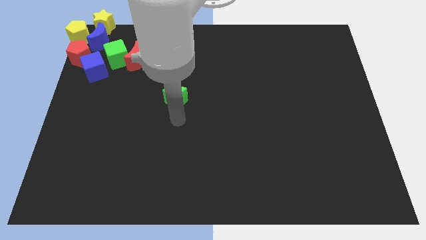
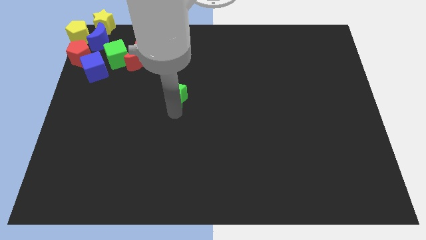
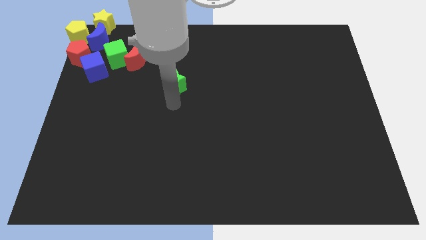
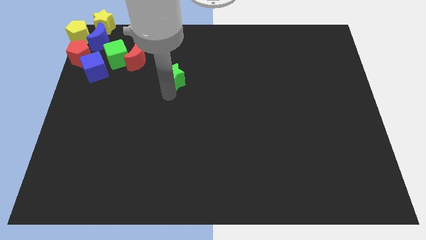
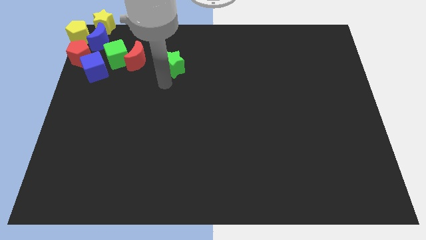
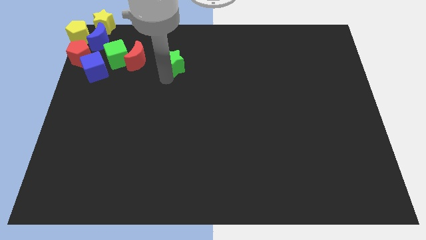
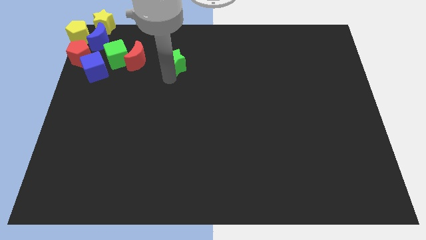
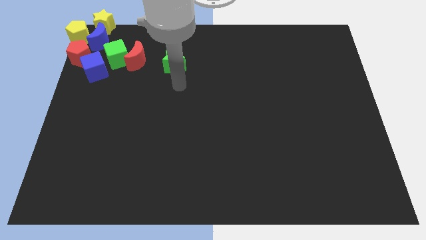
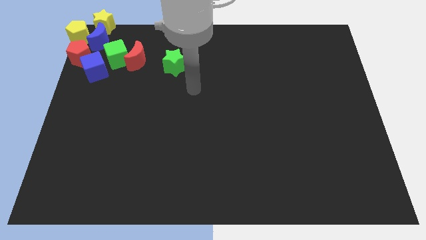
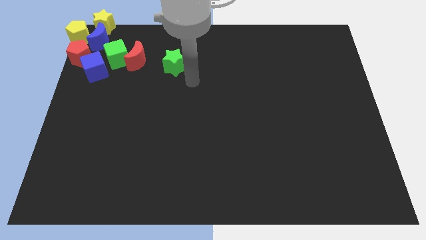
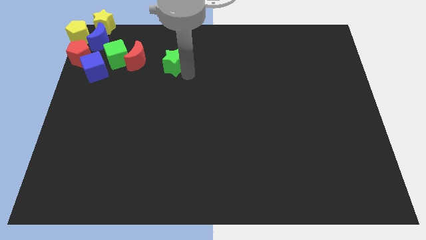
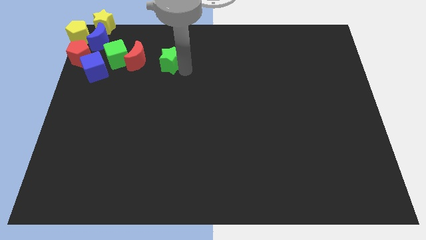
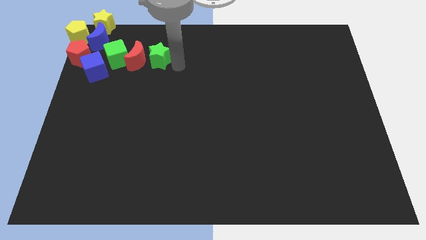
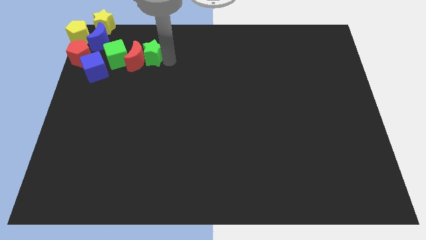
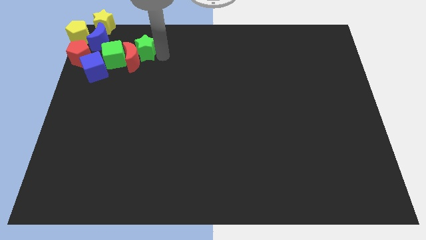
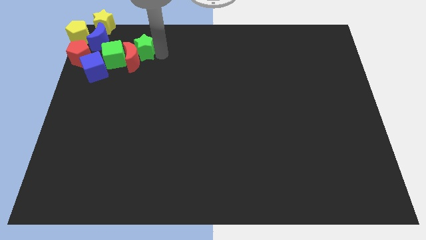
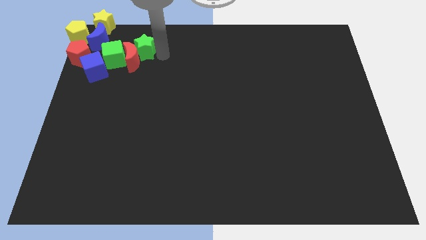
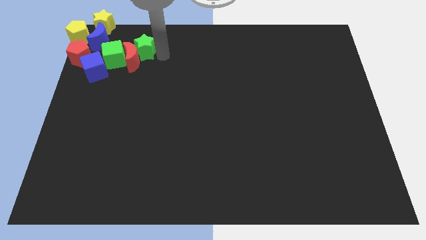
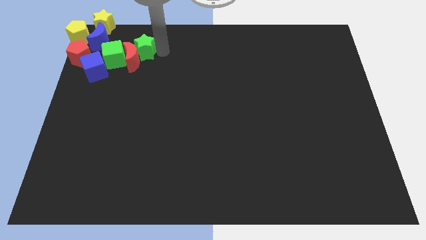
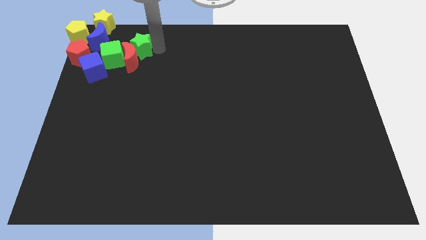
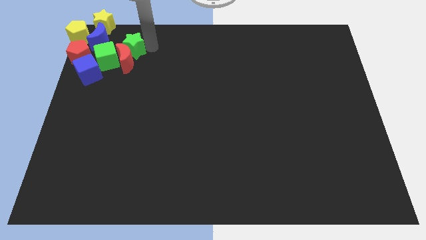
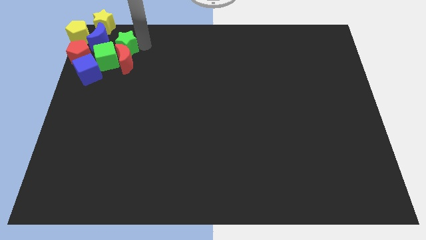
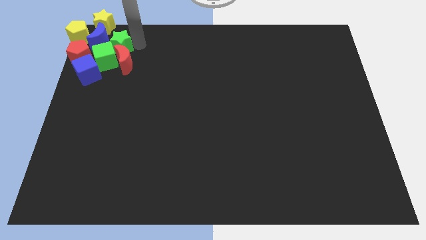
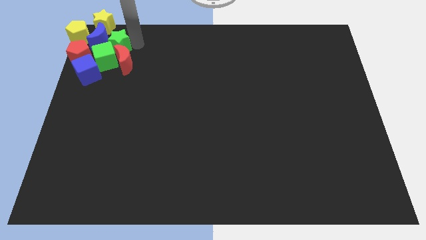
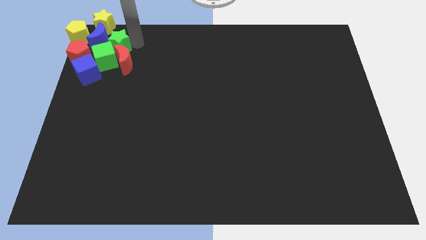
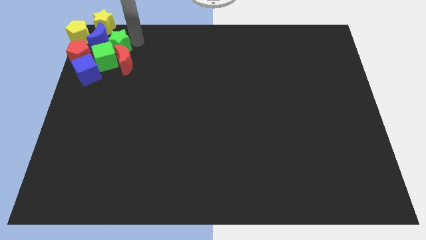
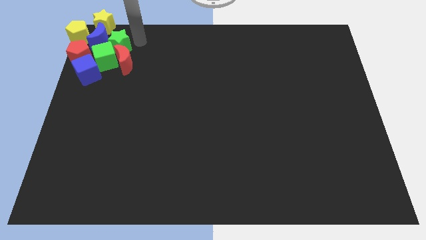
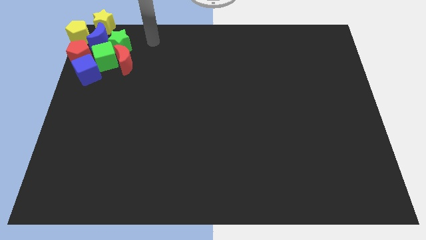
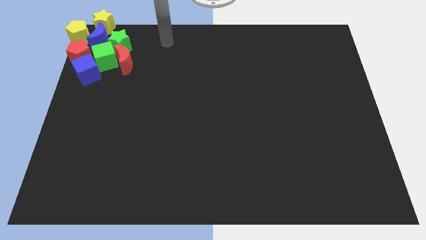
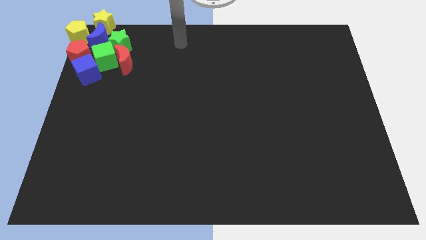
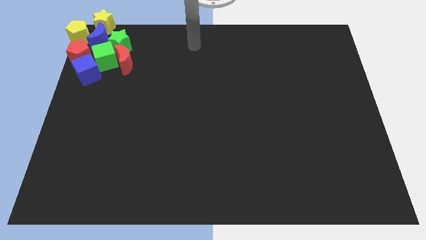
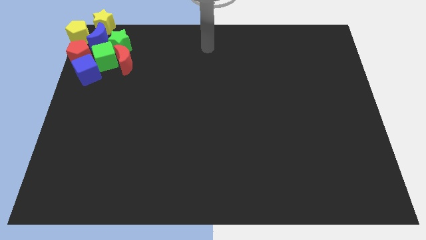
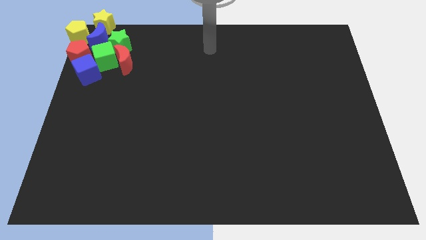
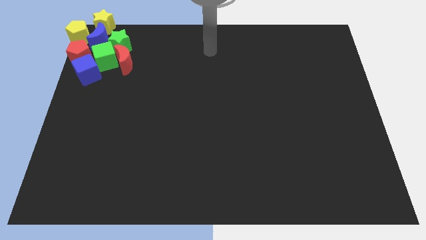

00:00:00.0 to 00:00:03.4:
move the green star to the right of the blue crescent

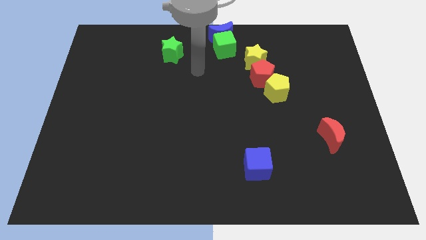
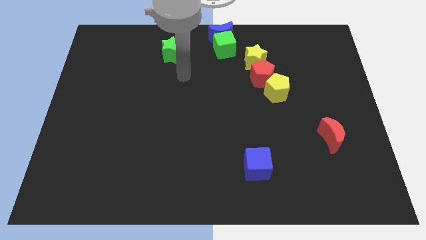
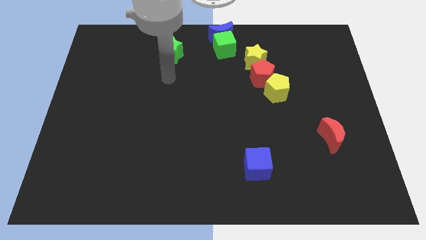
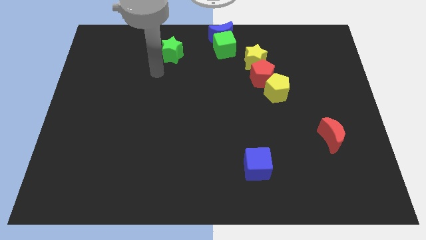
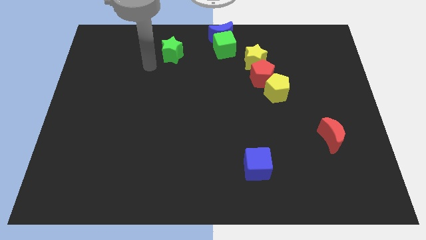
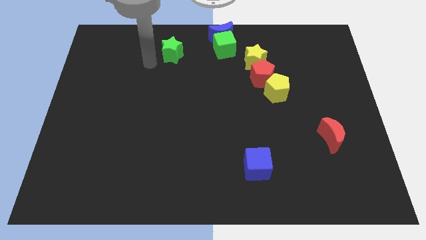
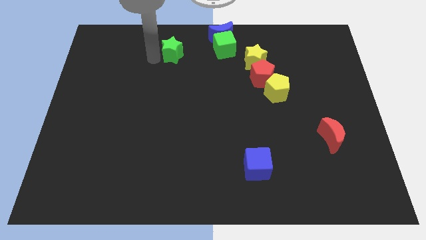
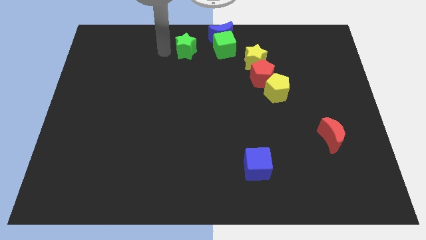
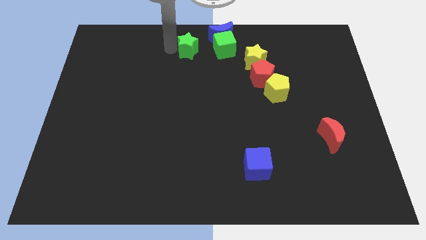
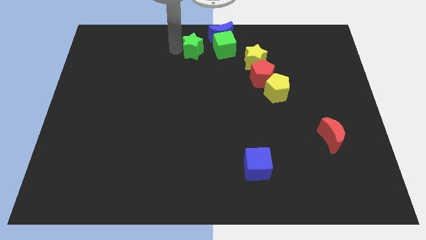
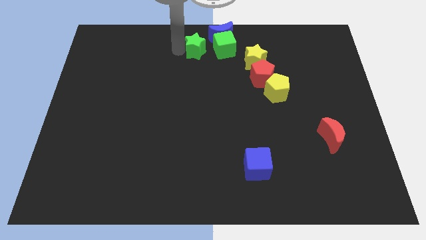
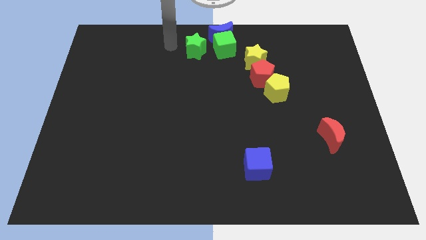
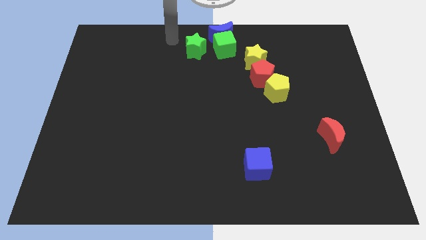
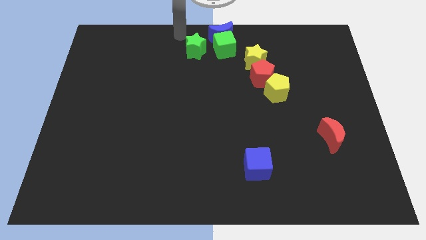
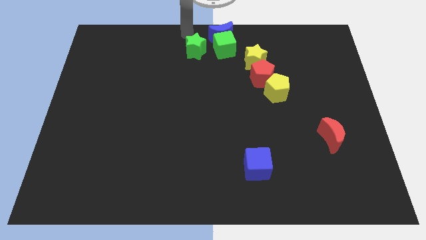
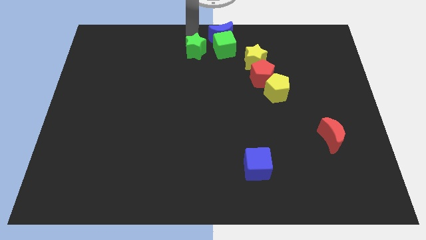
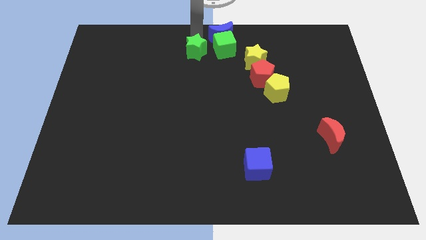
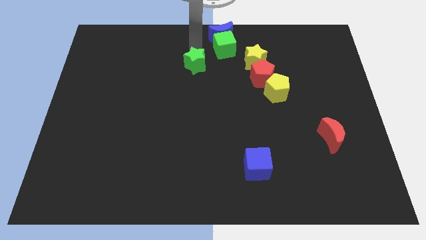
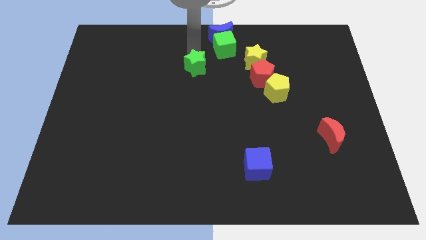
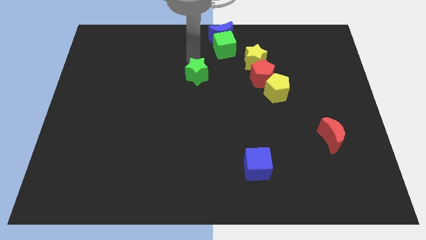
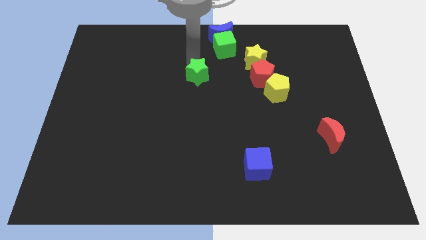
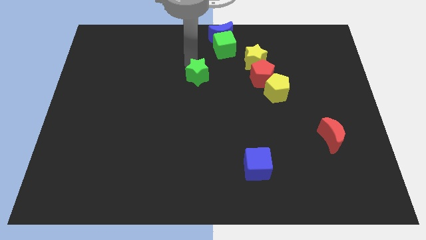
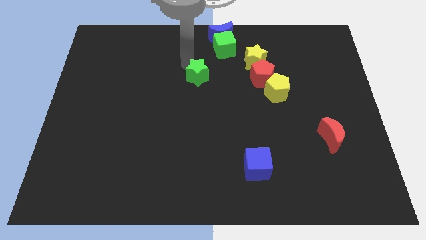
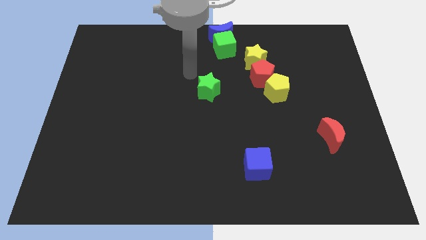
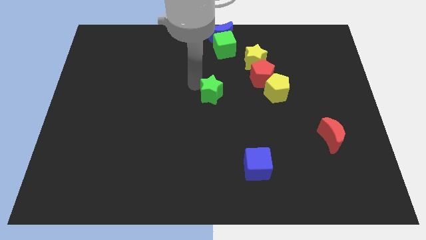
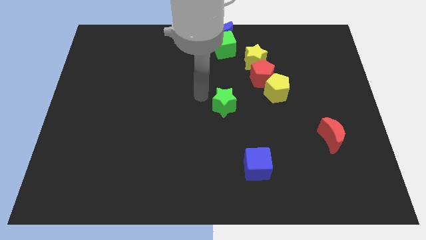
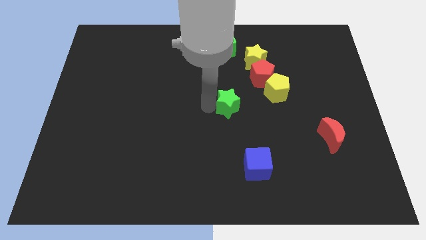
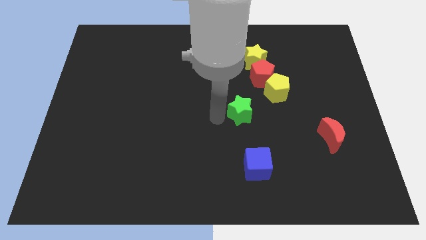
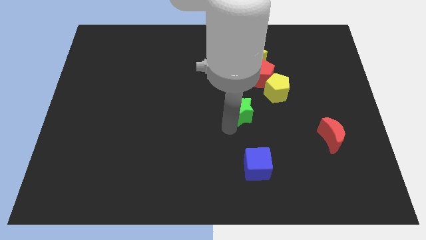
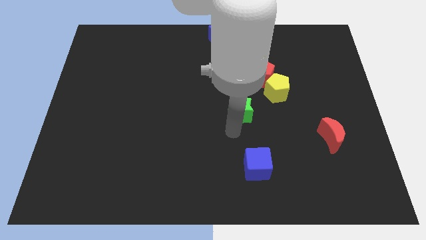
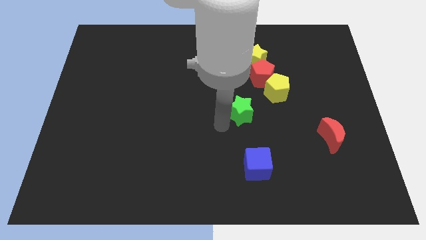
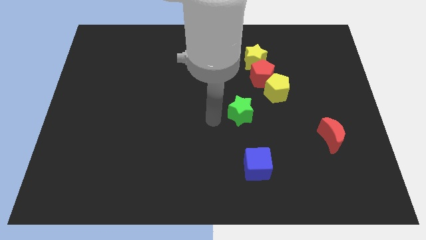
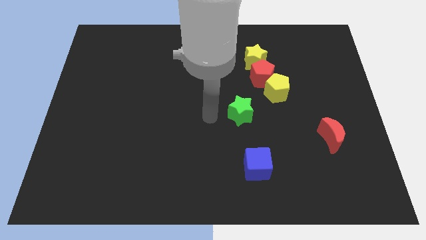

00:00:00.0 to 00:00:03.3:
move the green star towards bottom right side of the board

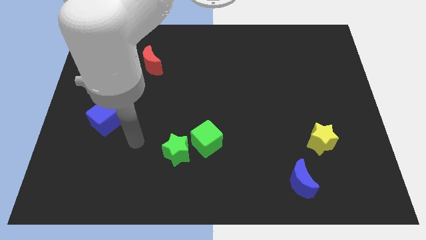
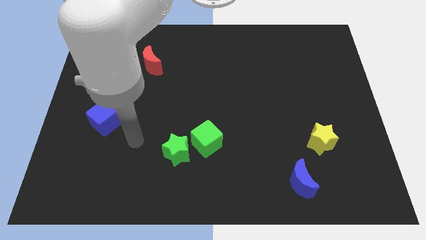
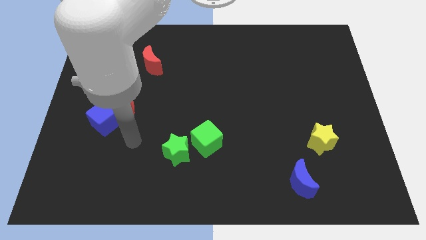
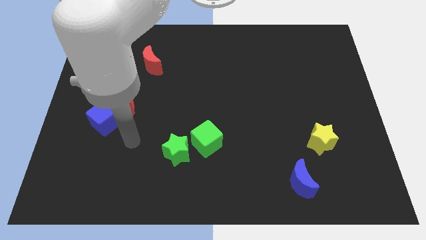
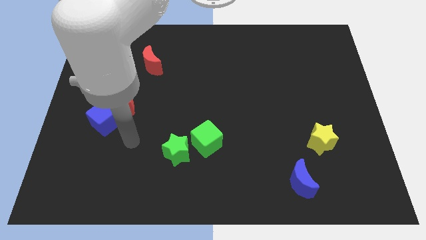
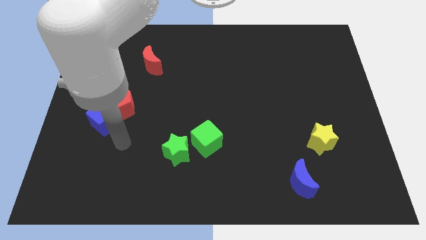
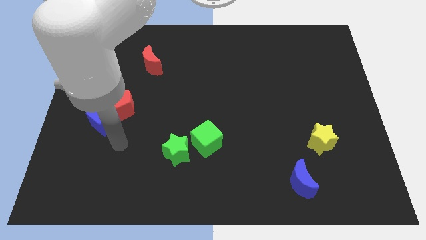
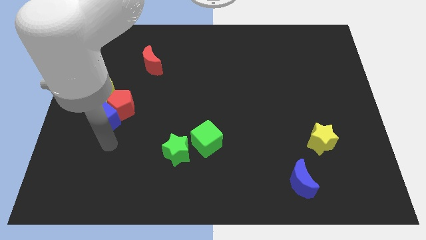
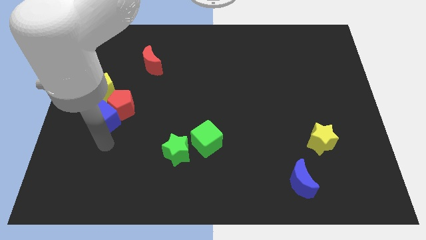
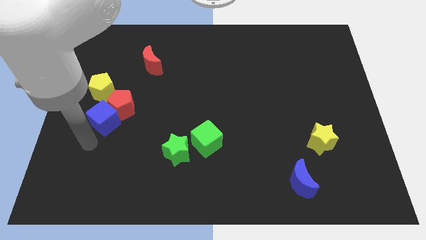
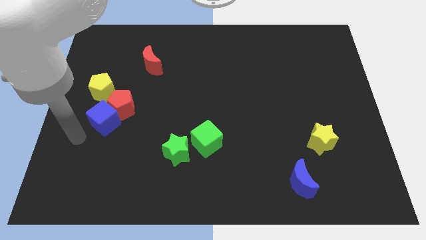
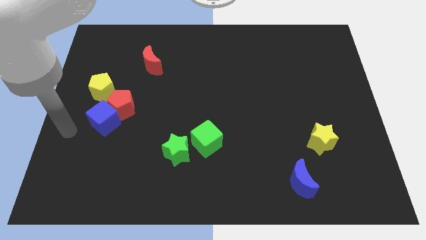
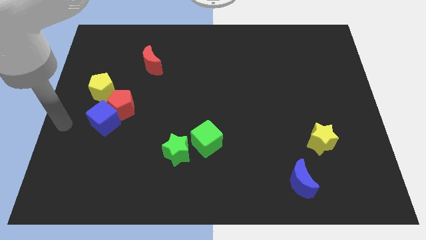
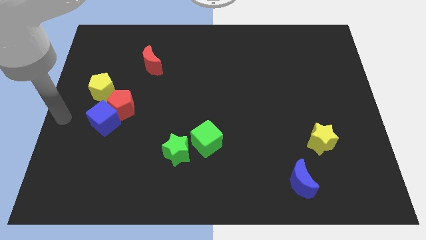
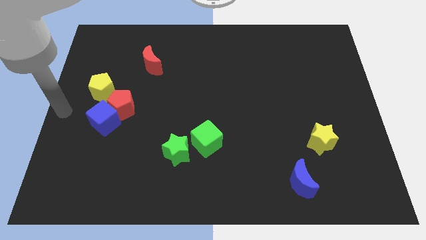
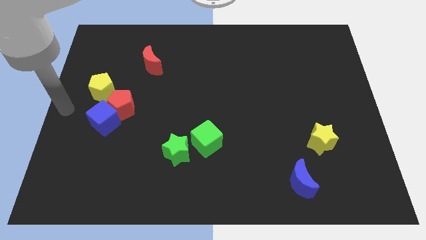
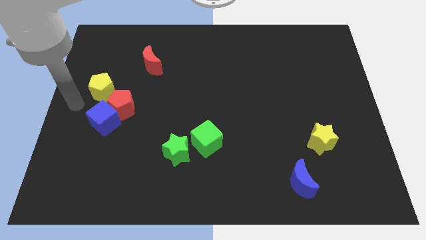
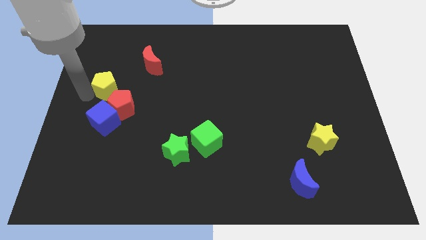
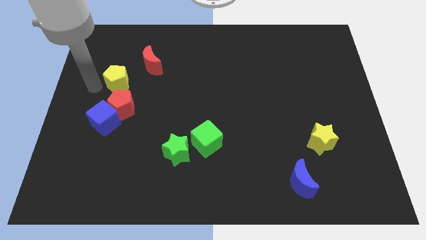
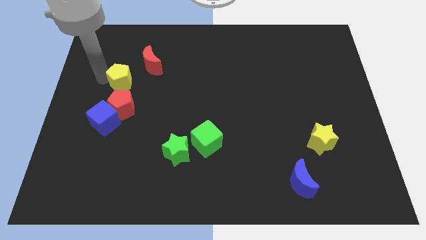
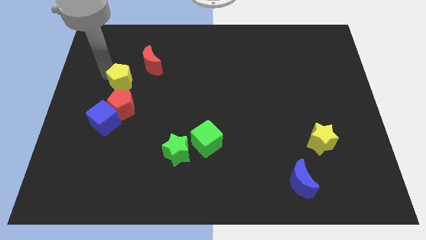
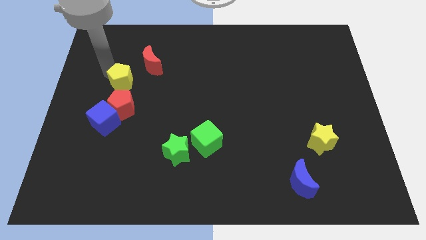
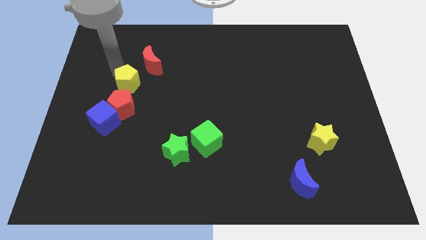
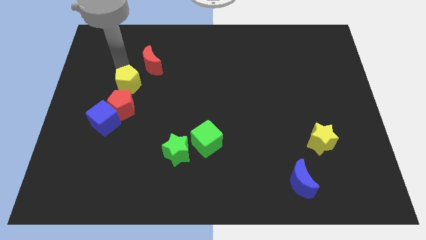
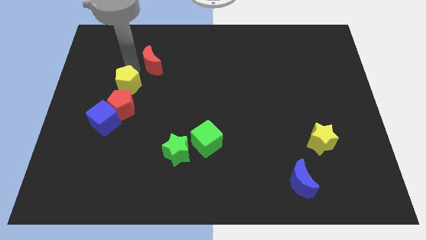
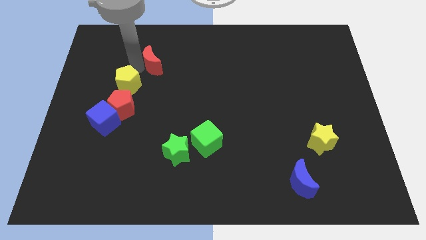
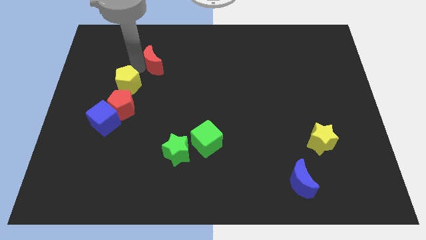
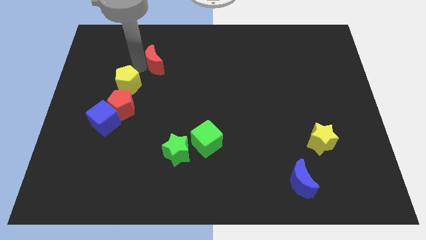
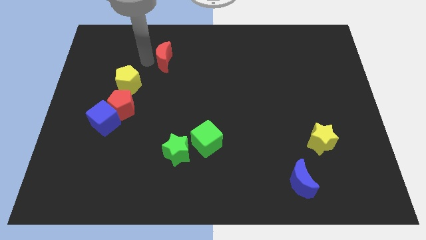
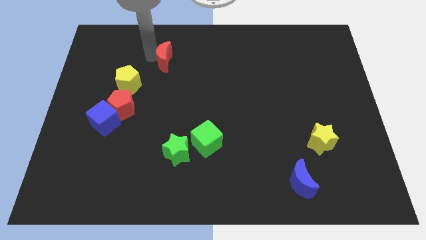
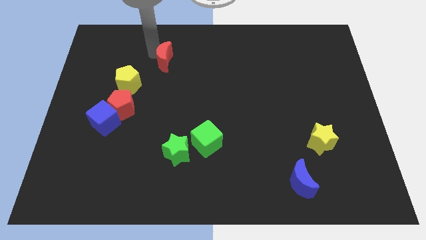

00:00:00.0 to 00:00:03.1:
move the yellow pentagon above the red pentagon
